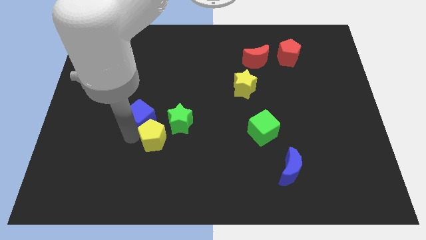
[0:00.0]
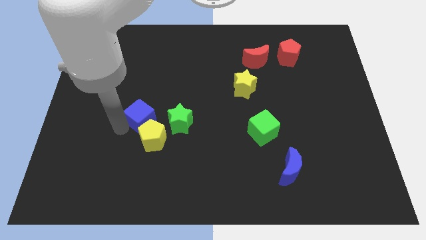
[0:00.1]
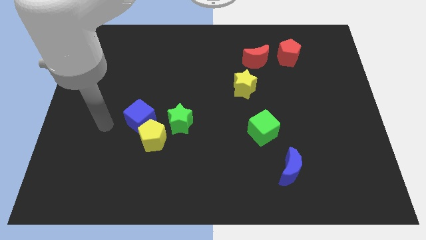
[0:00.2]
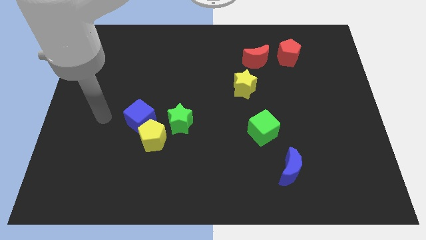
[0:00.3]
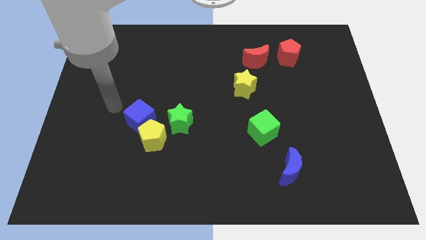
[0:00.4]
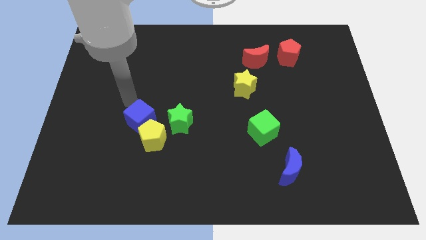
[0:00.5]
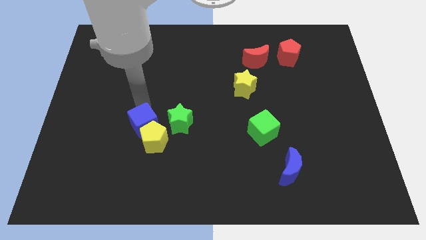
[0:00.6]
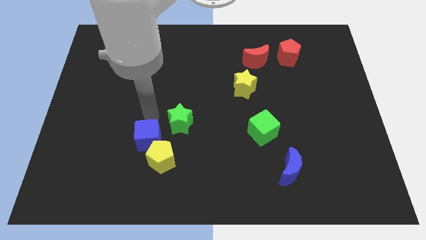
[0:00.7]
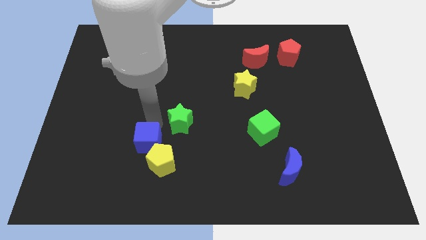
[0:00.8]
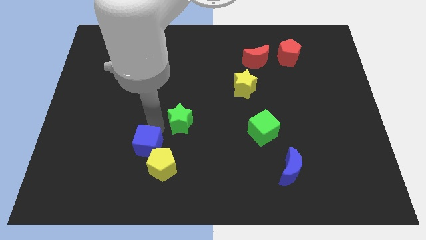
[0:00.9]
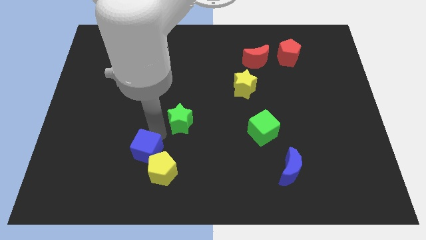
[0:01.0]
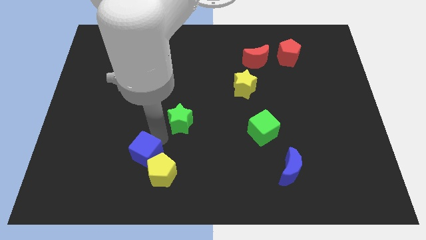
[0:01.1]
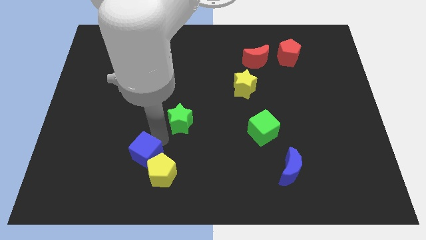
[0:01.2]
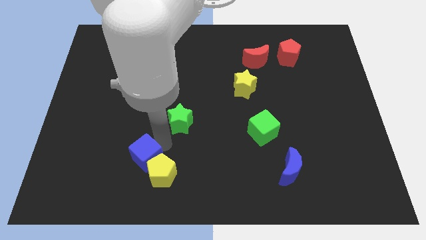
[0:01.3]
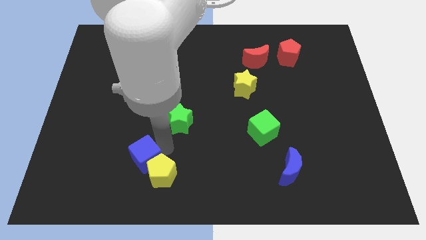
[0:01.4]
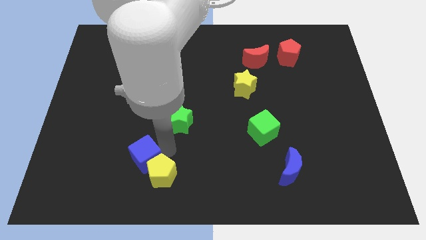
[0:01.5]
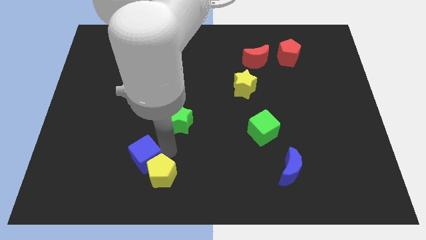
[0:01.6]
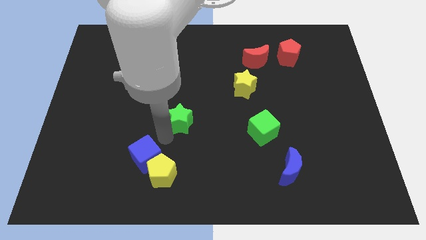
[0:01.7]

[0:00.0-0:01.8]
push blue cube towards bottom

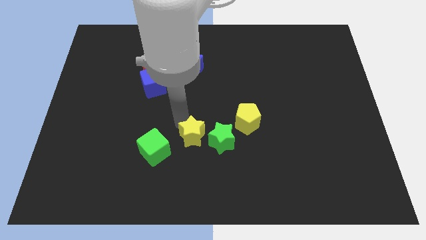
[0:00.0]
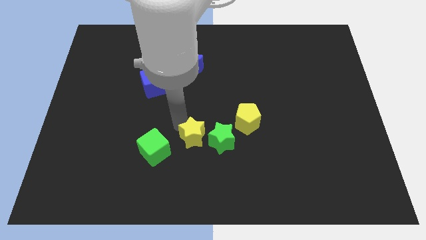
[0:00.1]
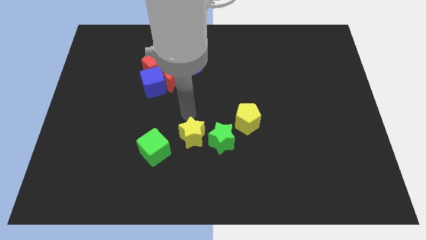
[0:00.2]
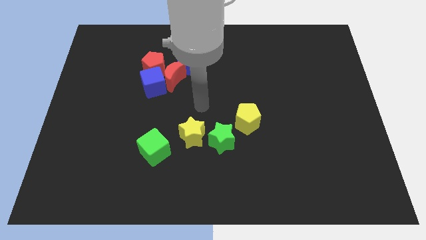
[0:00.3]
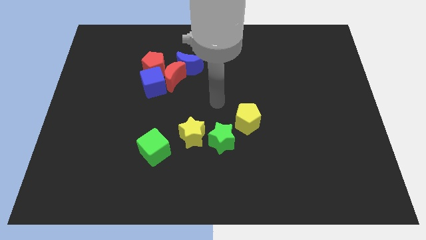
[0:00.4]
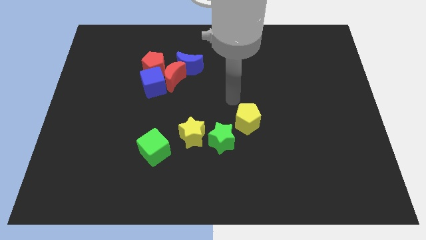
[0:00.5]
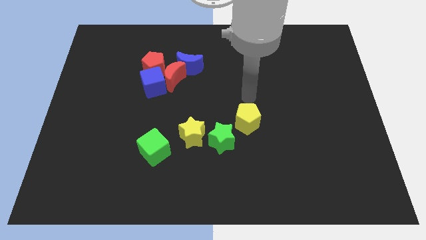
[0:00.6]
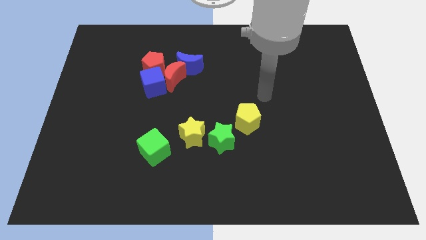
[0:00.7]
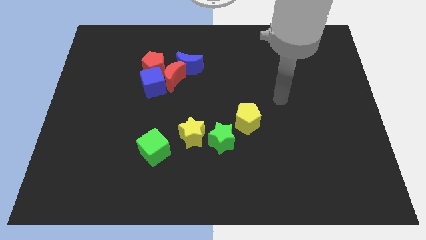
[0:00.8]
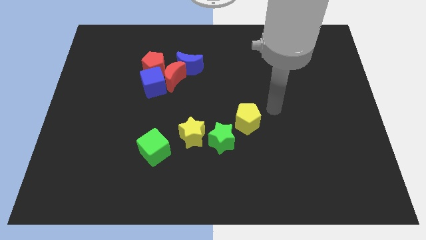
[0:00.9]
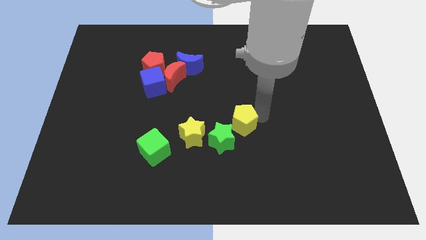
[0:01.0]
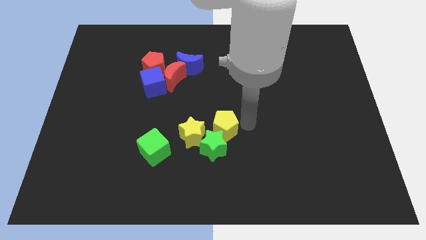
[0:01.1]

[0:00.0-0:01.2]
push the yellow pentagon into the green star

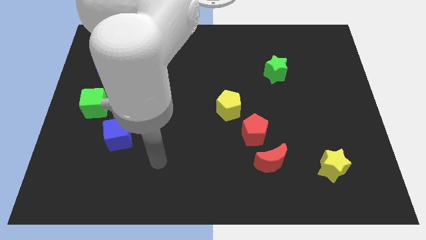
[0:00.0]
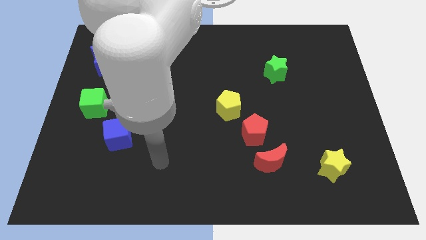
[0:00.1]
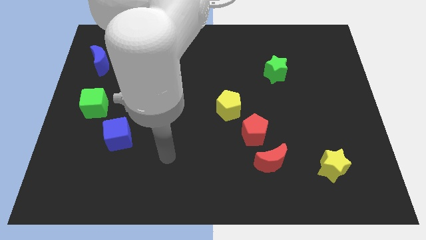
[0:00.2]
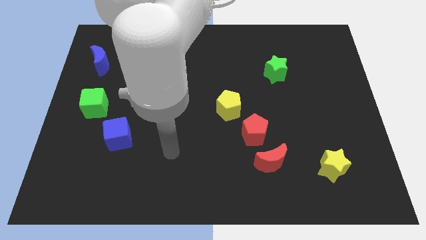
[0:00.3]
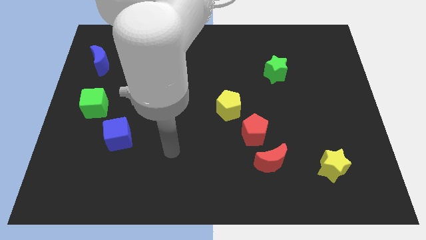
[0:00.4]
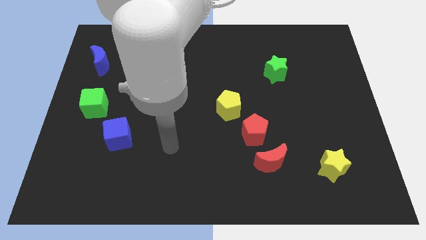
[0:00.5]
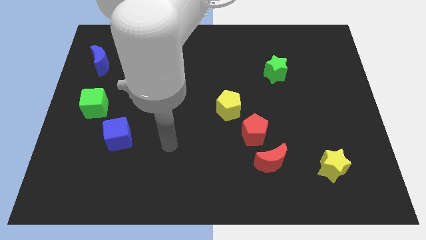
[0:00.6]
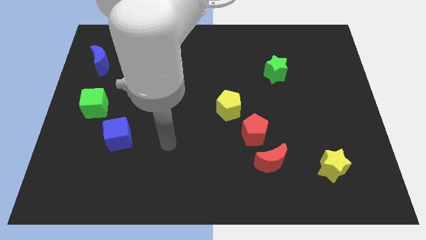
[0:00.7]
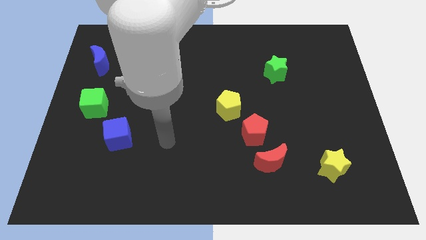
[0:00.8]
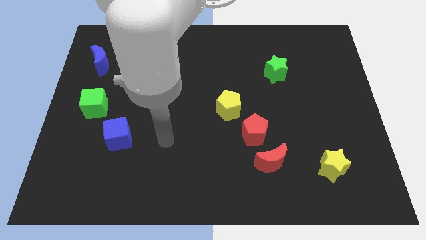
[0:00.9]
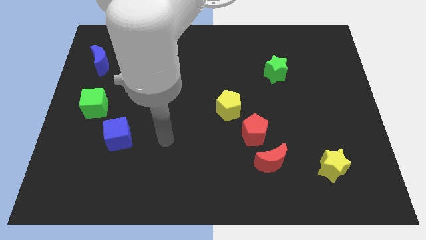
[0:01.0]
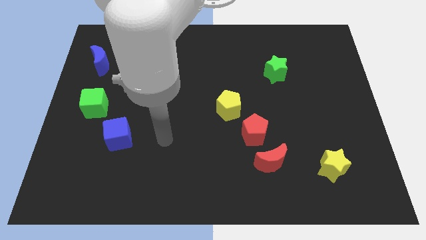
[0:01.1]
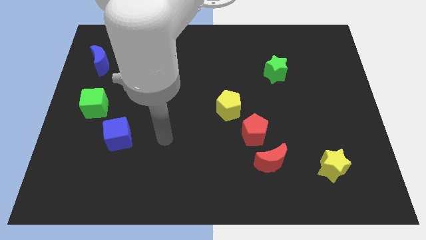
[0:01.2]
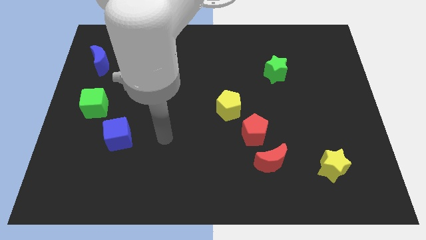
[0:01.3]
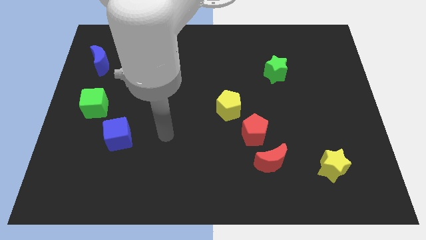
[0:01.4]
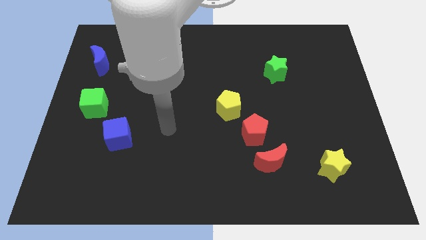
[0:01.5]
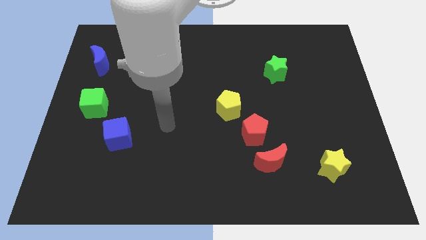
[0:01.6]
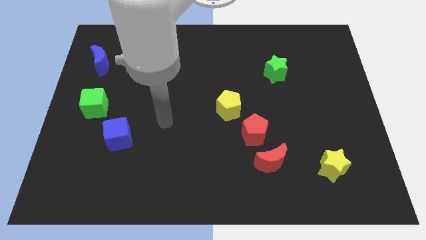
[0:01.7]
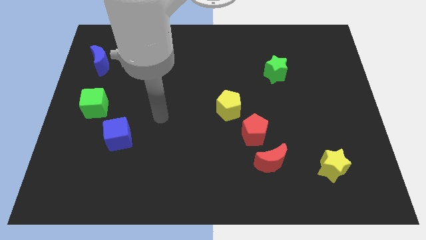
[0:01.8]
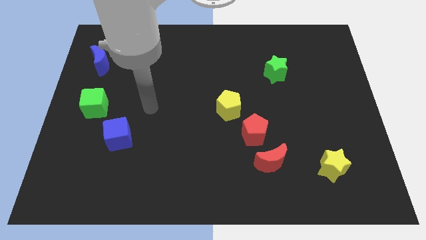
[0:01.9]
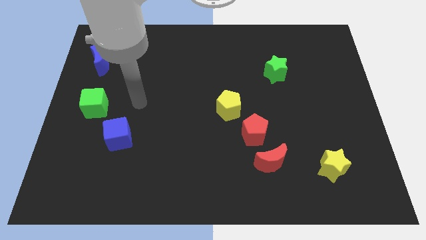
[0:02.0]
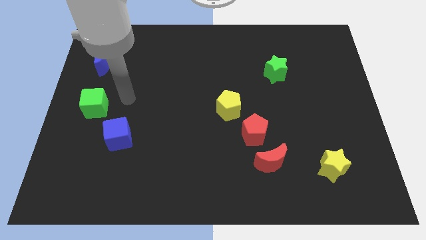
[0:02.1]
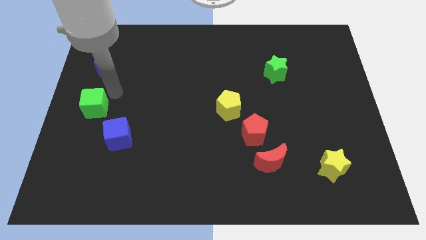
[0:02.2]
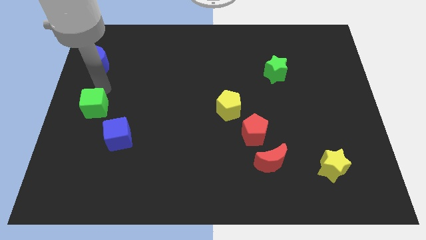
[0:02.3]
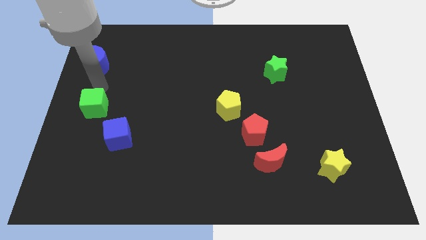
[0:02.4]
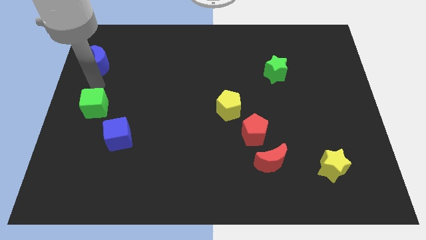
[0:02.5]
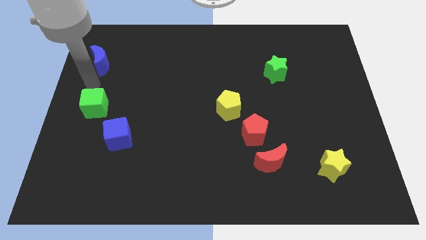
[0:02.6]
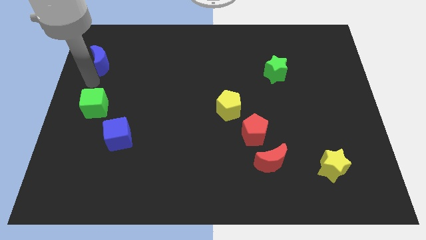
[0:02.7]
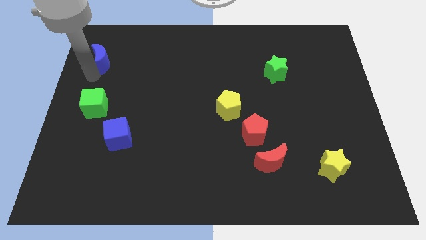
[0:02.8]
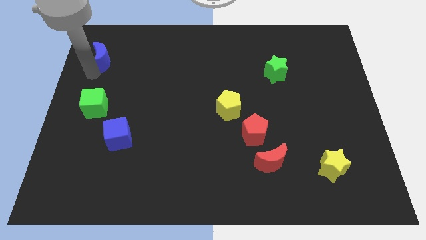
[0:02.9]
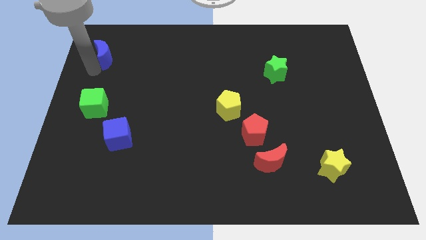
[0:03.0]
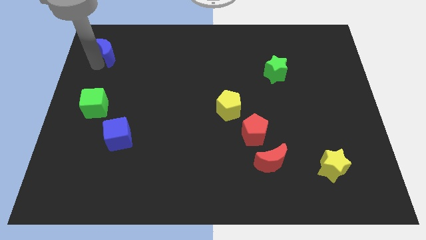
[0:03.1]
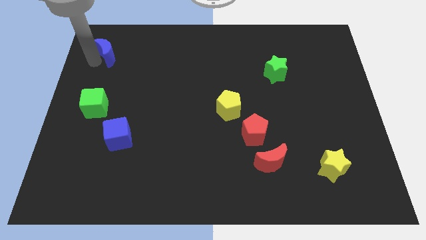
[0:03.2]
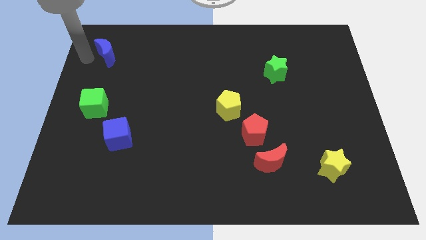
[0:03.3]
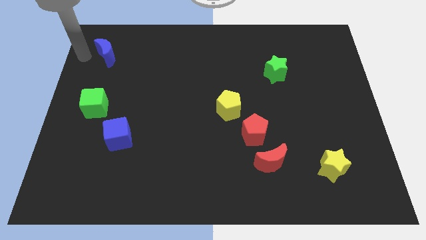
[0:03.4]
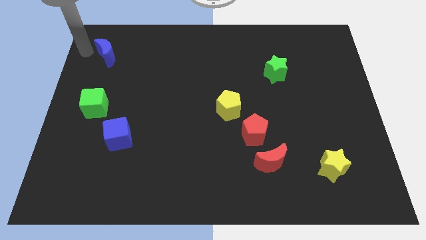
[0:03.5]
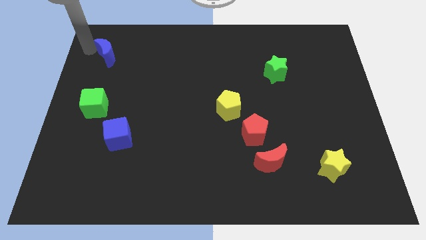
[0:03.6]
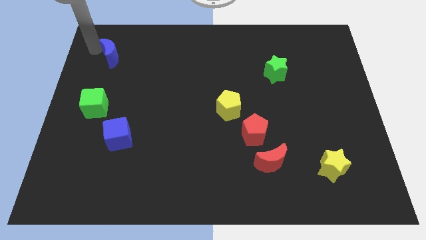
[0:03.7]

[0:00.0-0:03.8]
move blue moon slightly right

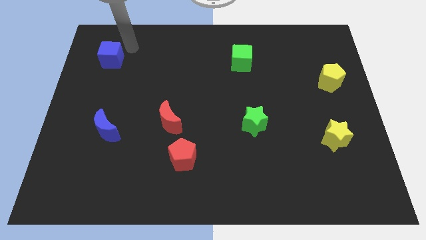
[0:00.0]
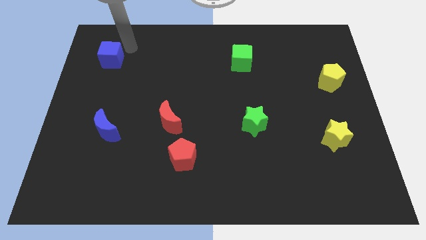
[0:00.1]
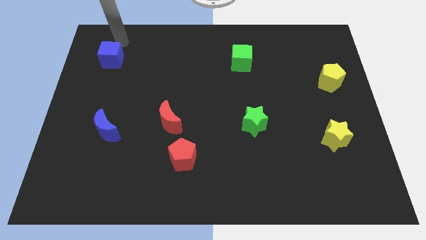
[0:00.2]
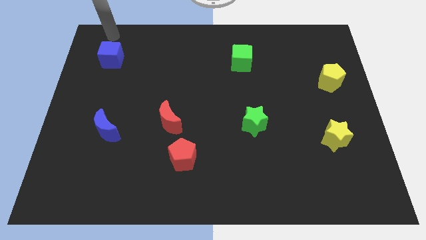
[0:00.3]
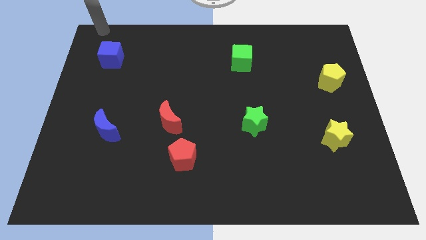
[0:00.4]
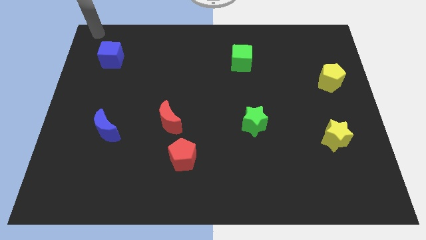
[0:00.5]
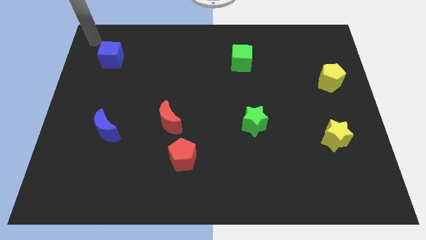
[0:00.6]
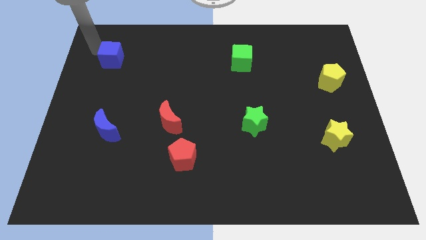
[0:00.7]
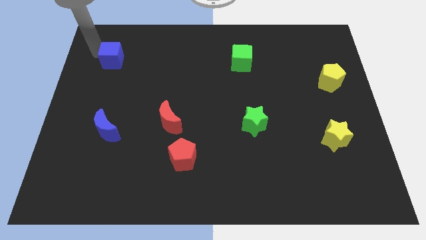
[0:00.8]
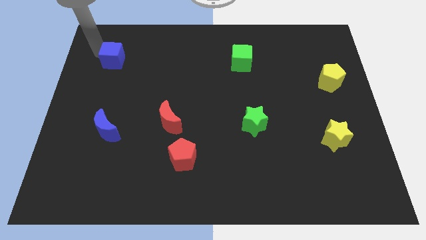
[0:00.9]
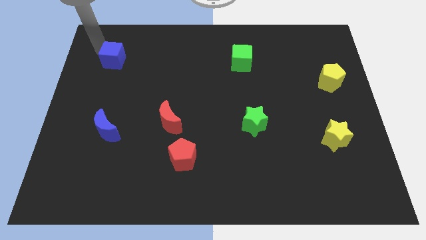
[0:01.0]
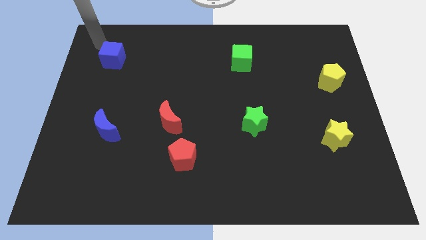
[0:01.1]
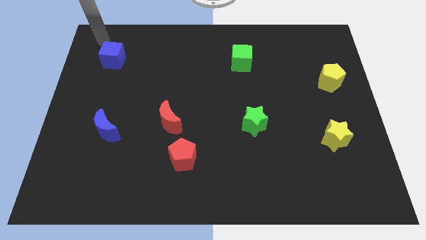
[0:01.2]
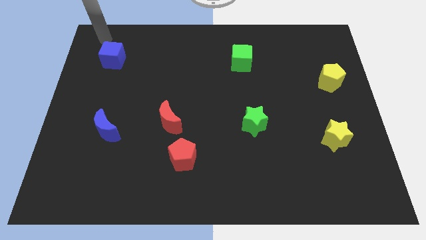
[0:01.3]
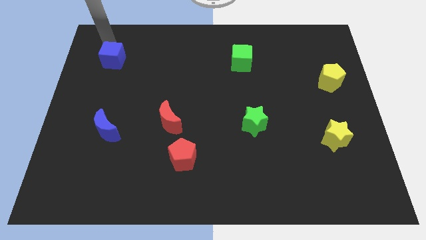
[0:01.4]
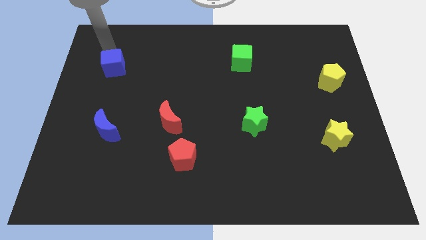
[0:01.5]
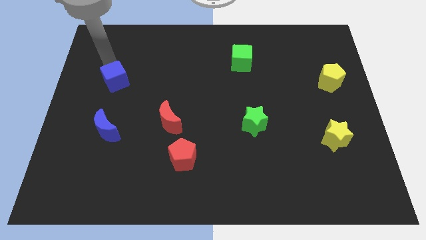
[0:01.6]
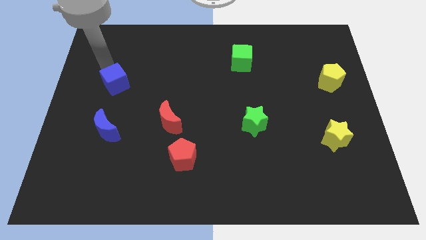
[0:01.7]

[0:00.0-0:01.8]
push the blue cube down

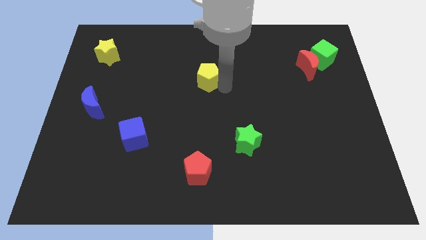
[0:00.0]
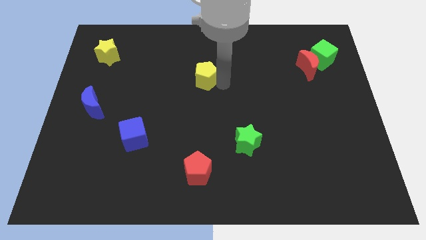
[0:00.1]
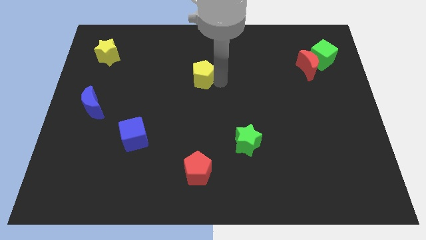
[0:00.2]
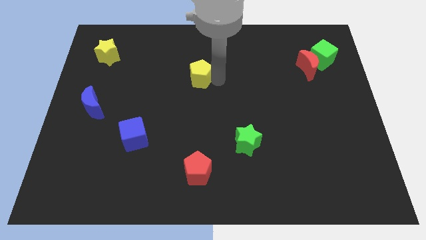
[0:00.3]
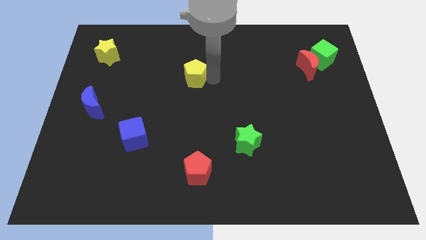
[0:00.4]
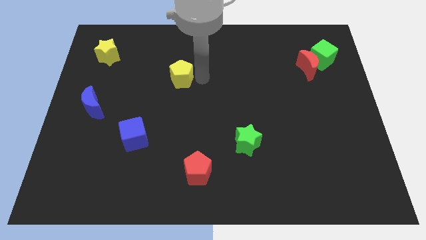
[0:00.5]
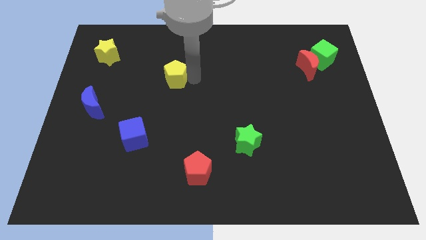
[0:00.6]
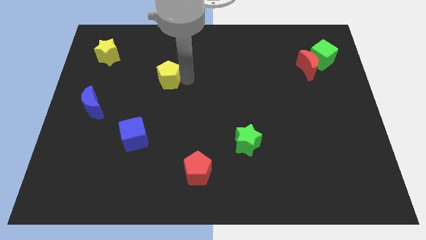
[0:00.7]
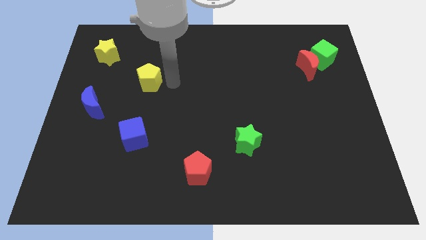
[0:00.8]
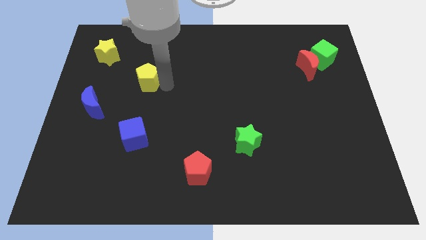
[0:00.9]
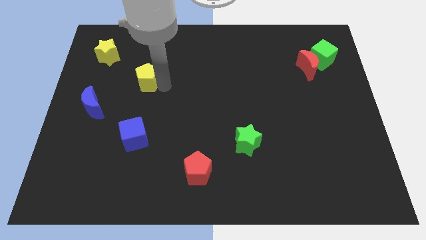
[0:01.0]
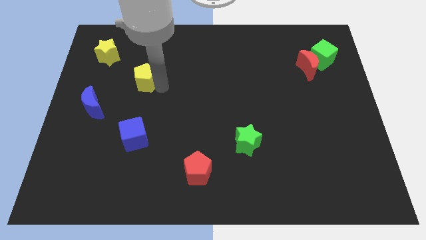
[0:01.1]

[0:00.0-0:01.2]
move the yellow pentagon to the left side of the board
